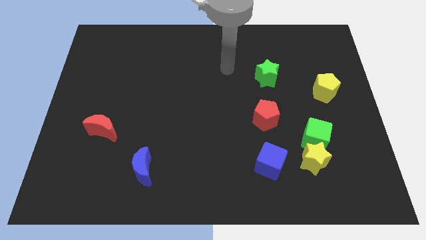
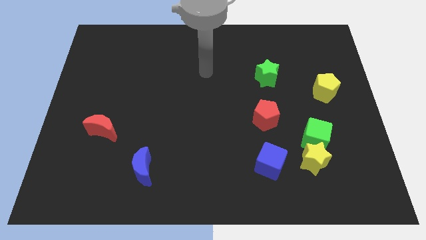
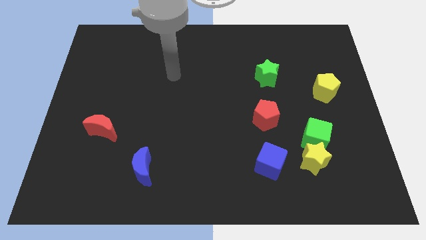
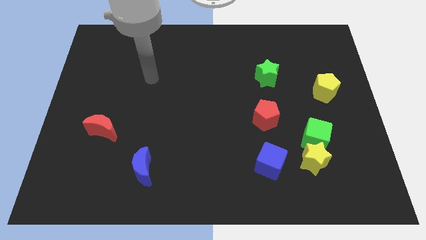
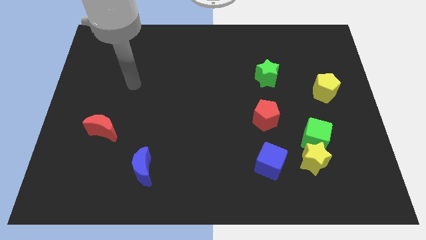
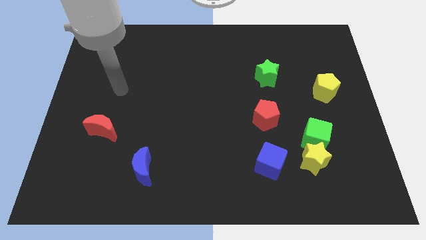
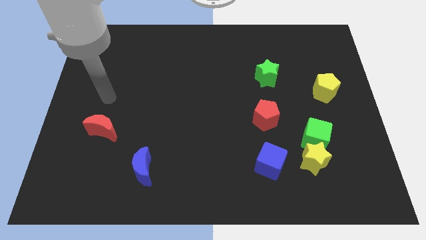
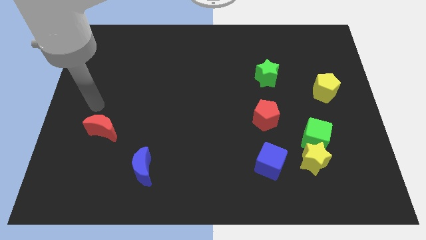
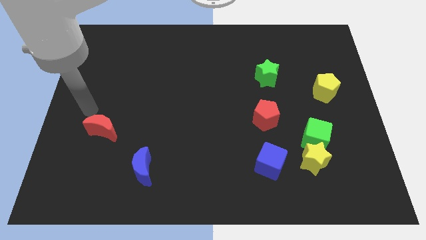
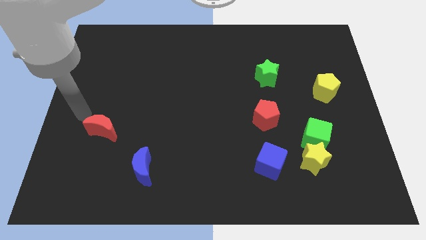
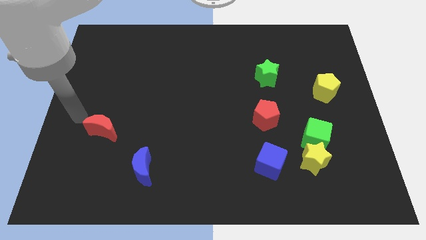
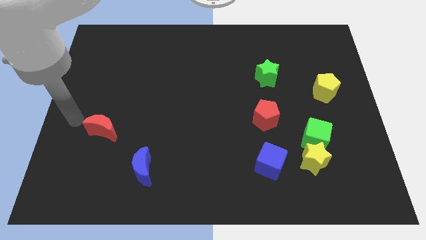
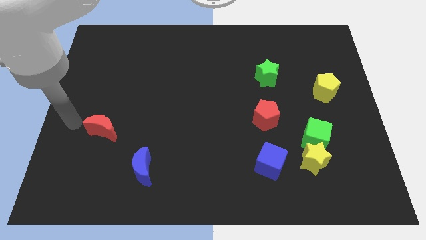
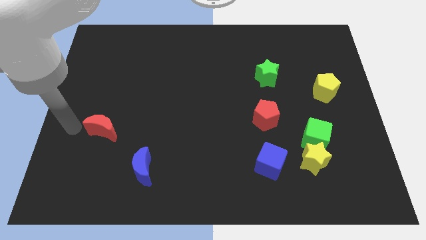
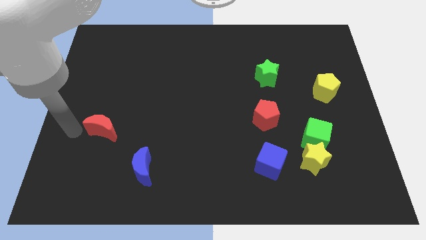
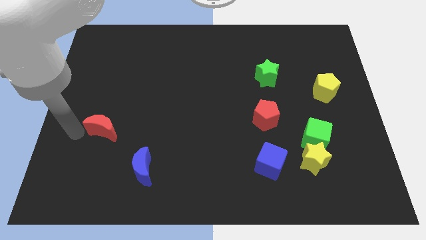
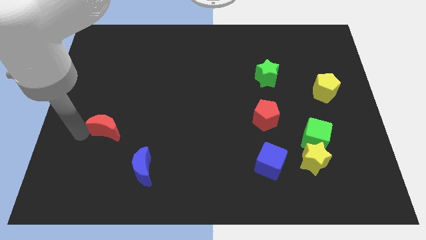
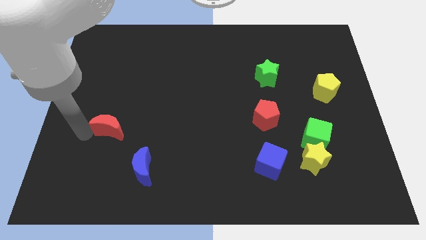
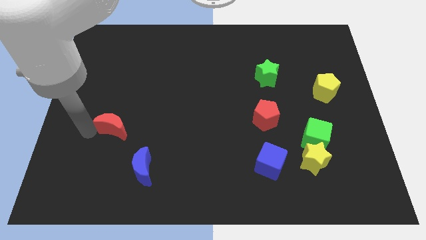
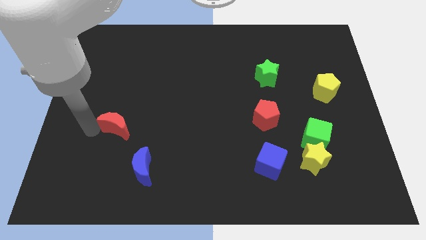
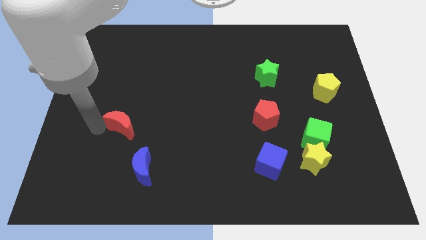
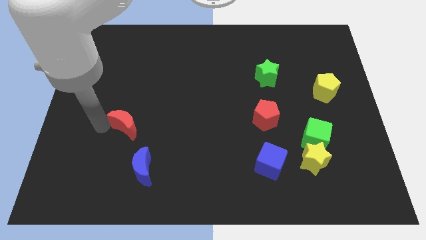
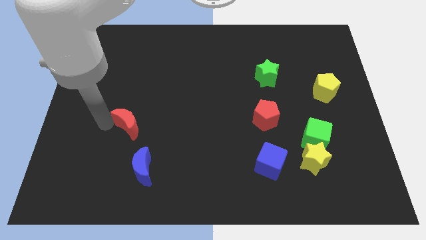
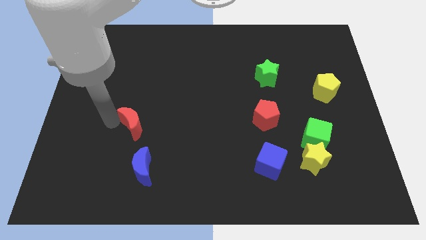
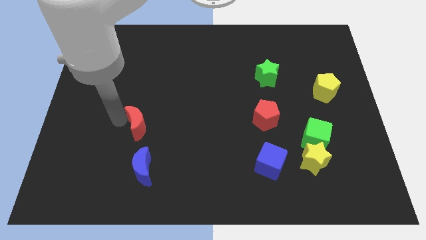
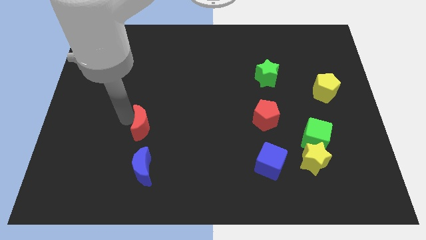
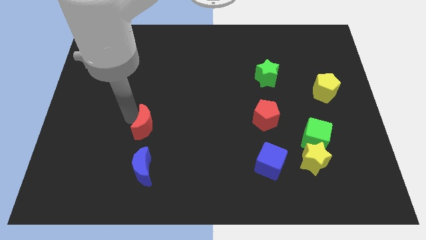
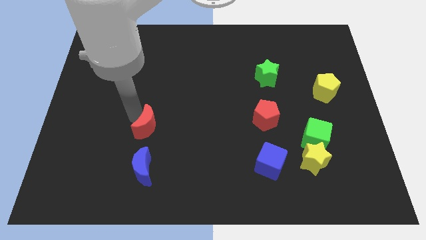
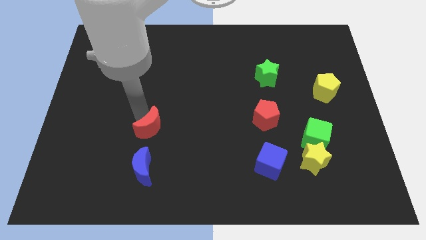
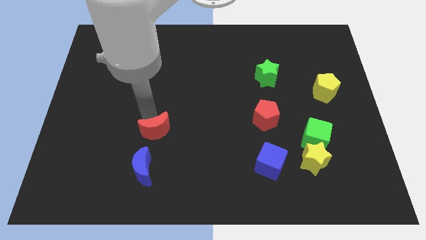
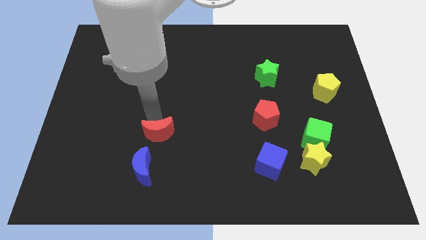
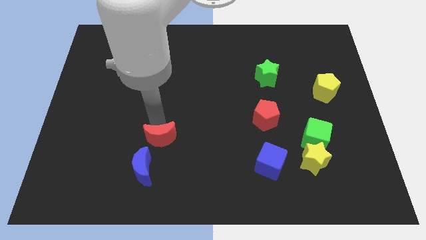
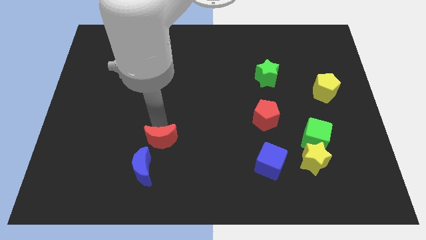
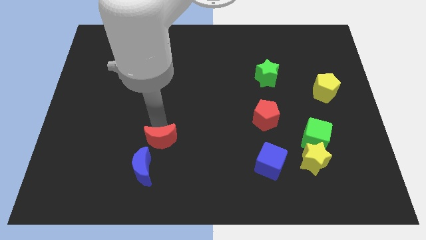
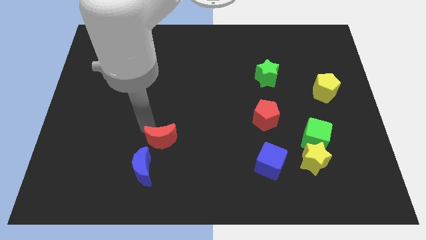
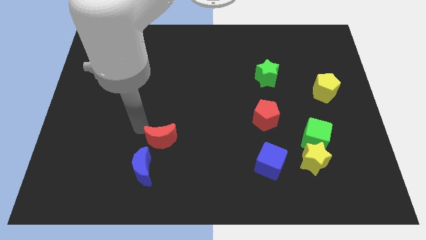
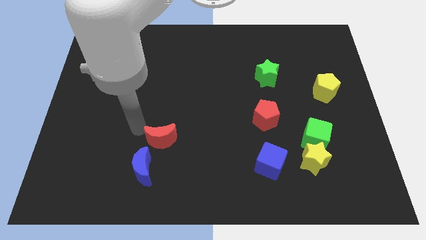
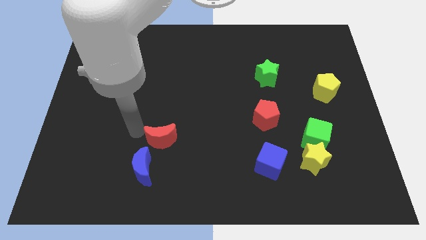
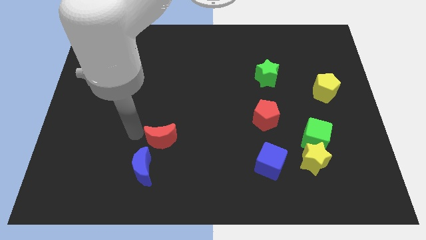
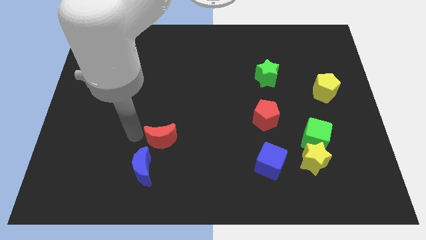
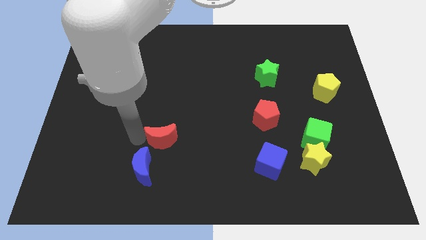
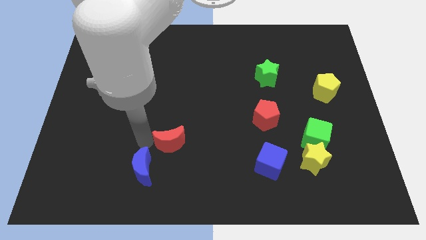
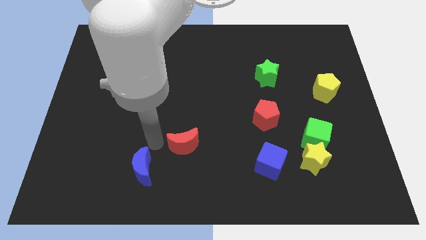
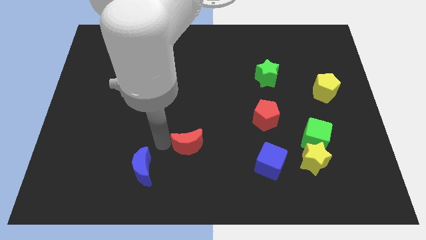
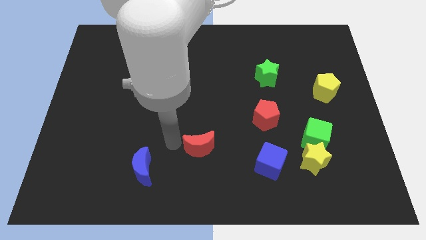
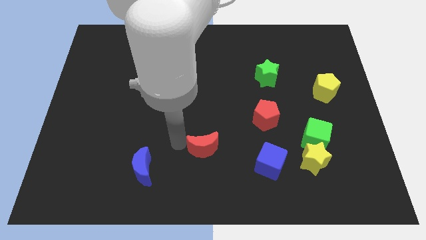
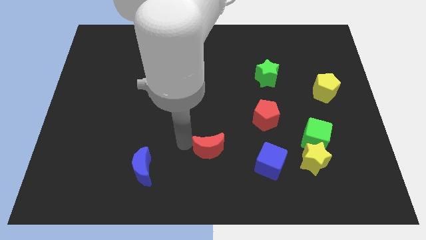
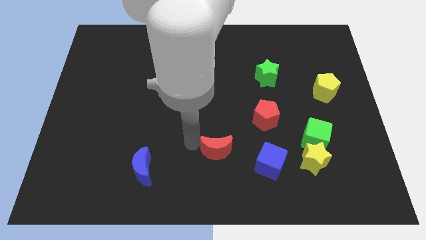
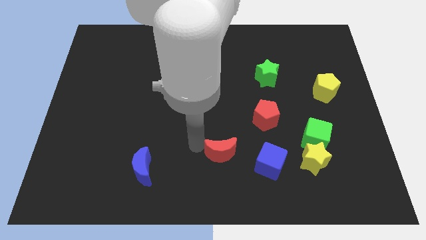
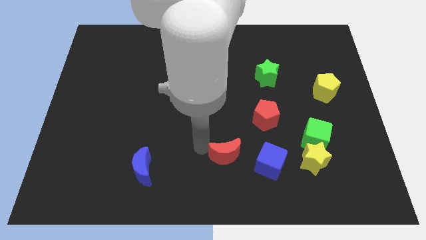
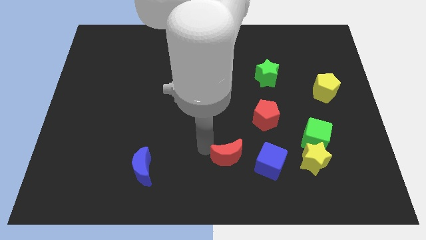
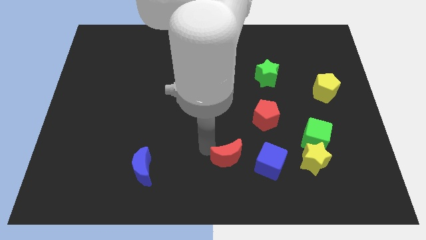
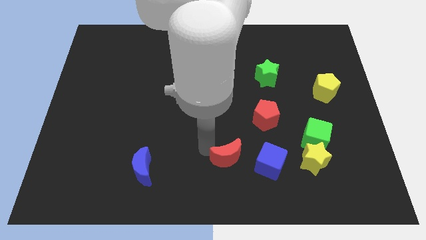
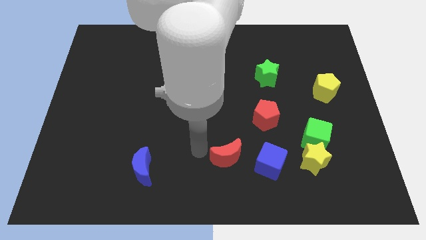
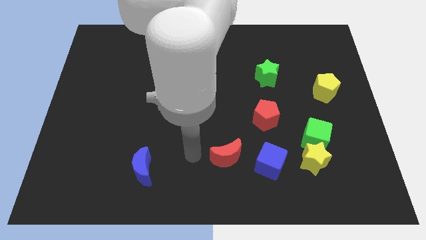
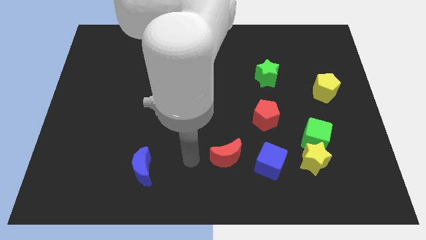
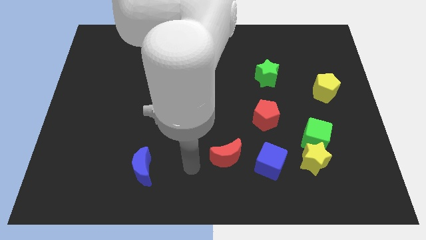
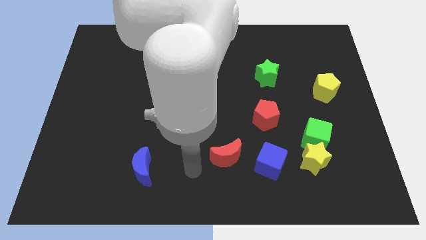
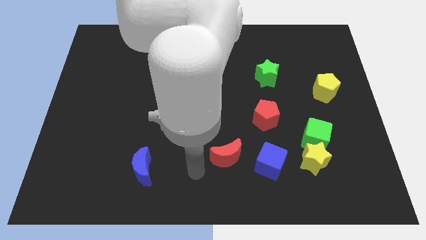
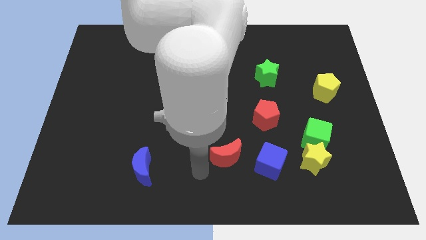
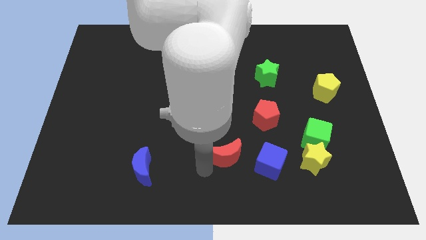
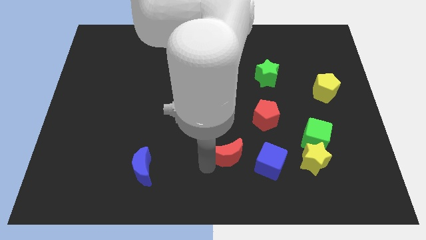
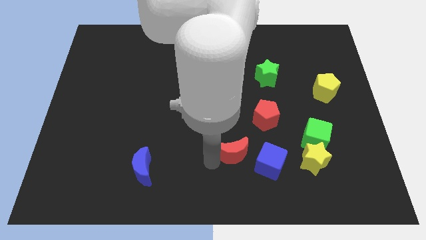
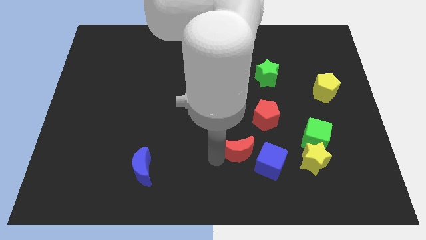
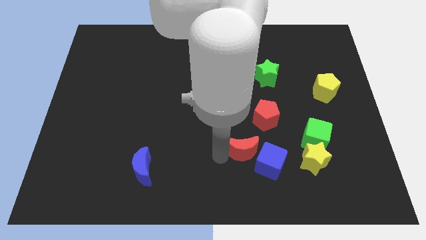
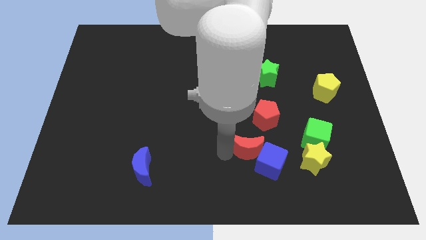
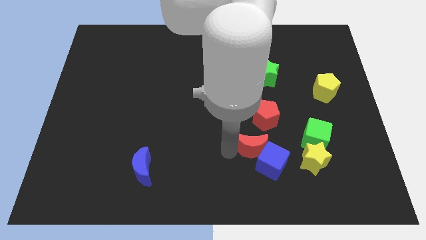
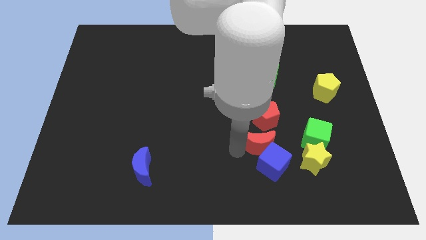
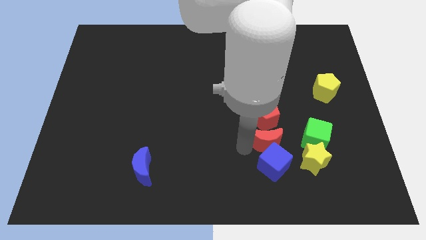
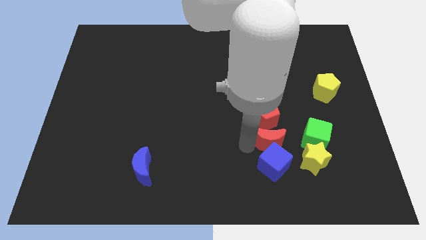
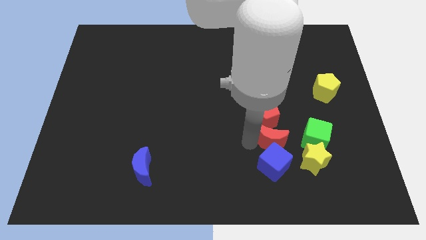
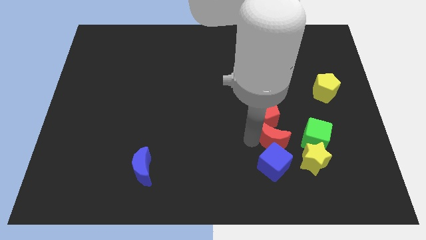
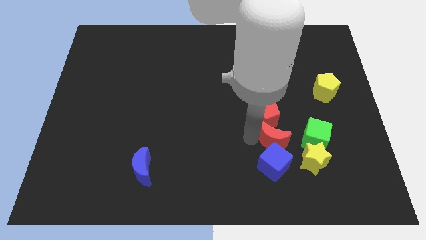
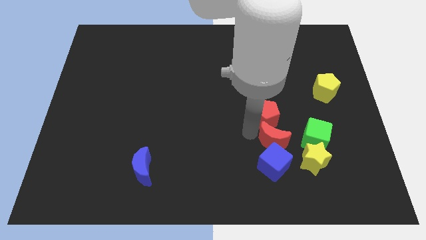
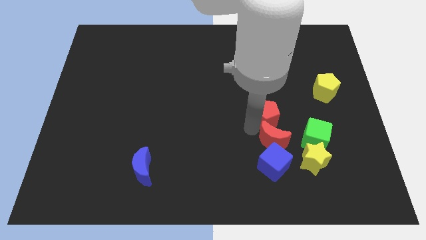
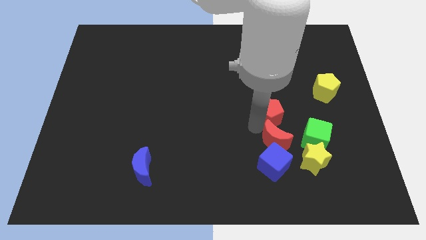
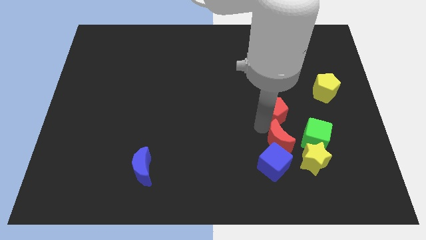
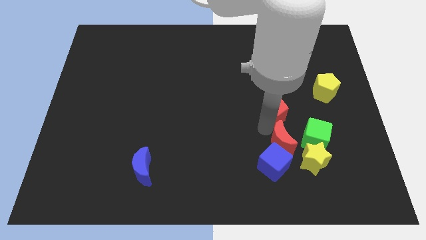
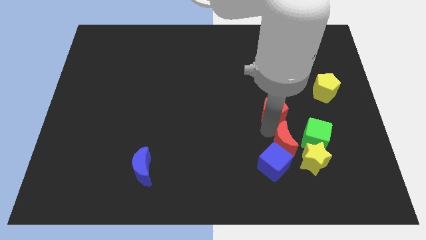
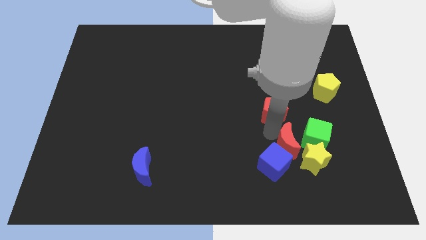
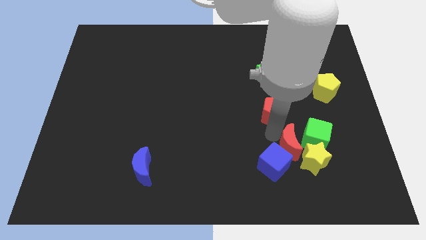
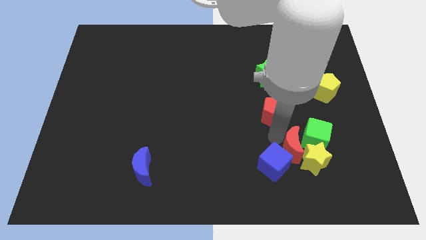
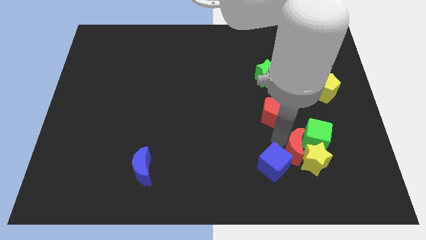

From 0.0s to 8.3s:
slide the red moon close to the yellow star
